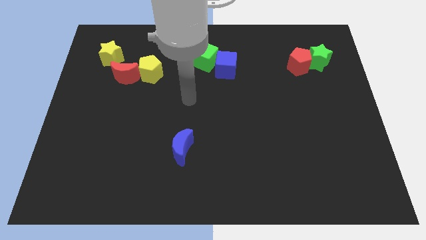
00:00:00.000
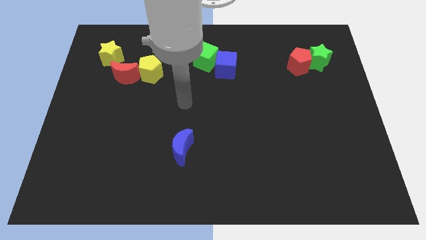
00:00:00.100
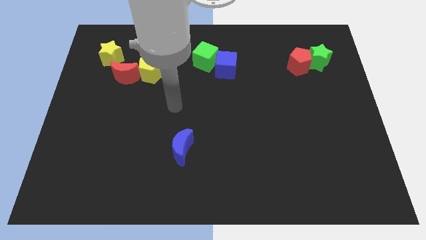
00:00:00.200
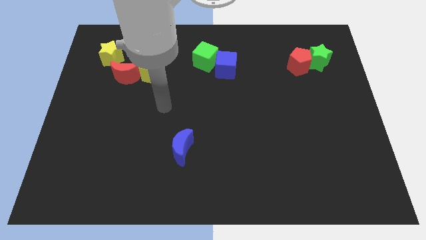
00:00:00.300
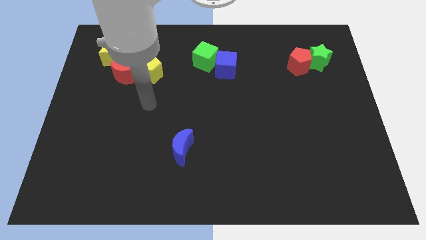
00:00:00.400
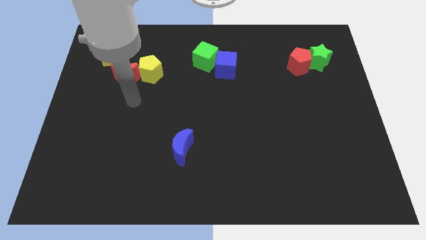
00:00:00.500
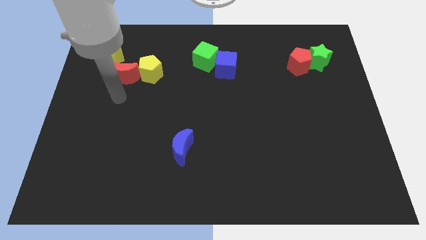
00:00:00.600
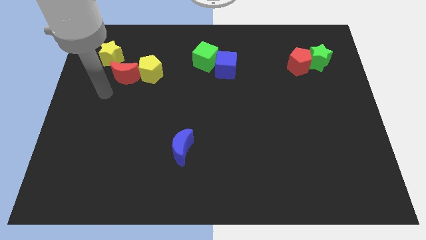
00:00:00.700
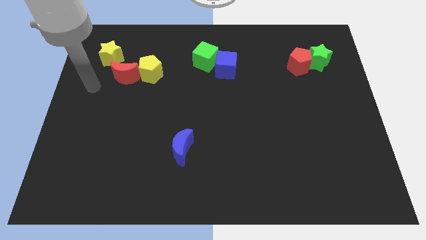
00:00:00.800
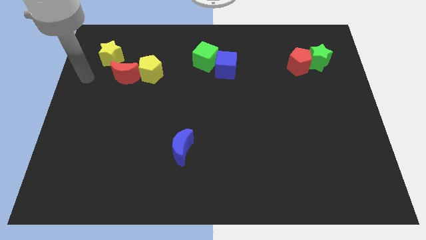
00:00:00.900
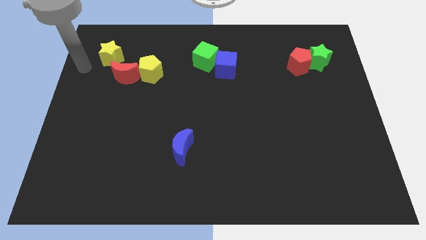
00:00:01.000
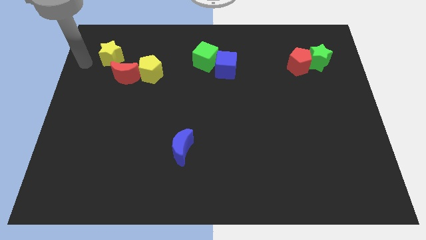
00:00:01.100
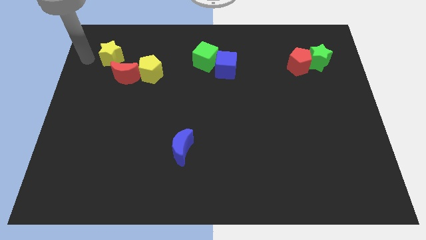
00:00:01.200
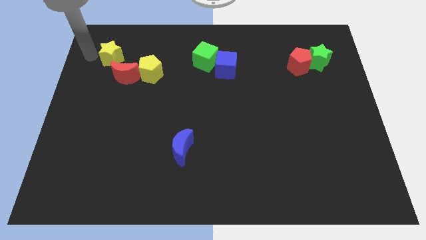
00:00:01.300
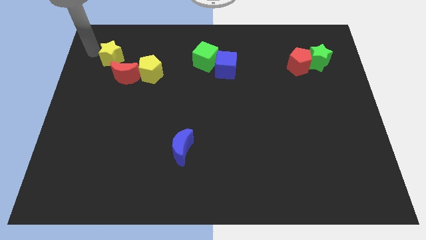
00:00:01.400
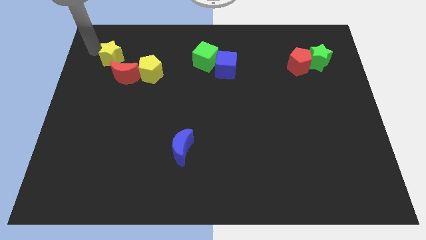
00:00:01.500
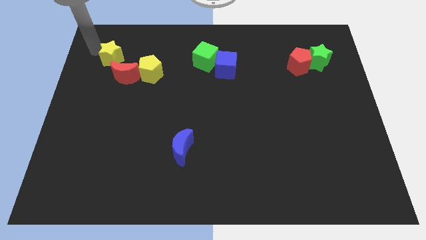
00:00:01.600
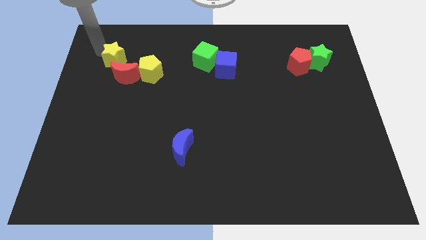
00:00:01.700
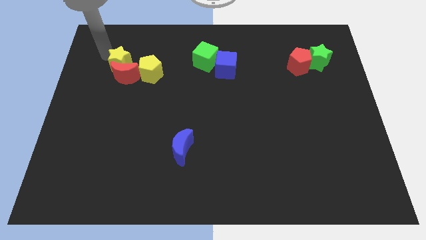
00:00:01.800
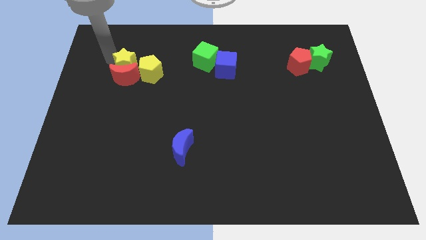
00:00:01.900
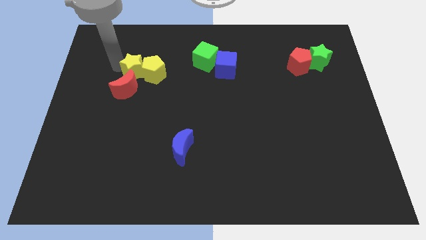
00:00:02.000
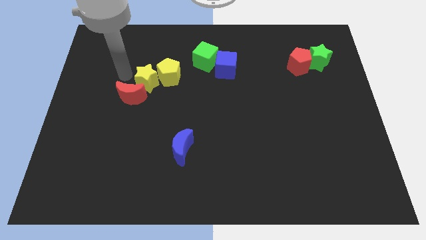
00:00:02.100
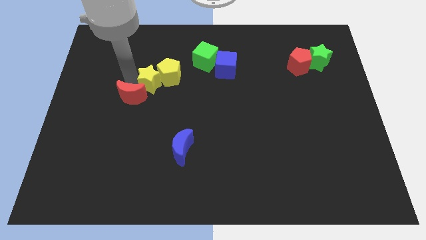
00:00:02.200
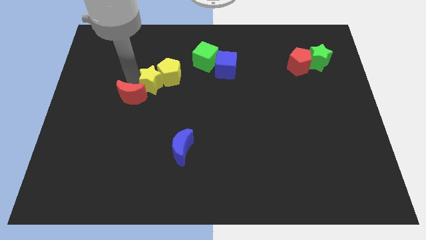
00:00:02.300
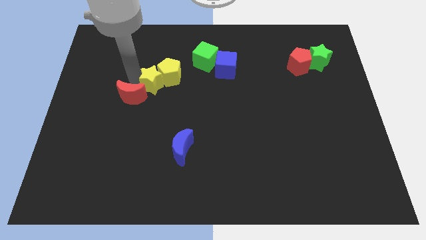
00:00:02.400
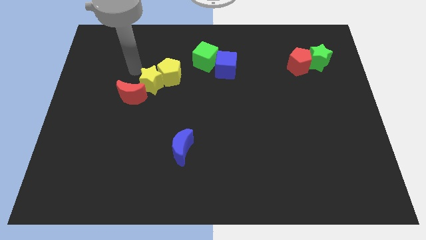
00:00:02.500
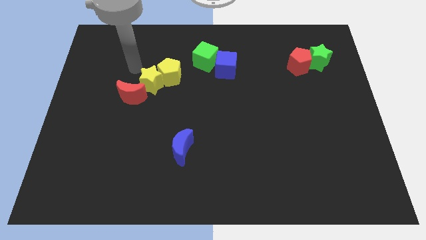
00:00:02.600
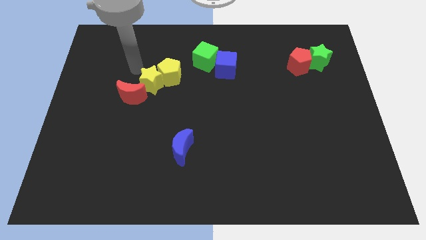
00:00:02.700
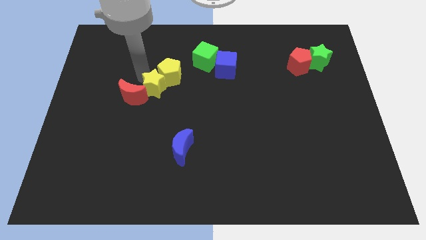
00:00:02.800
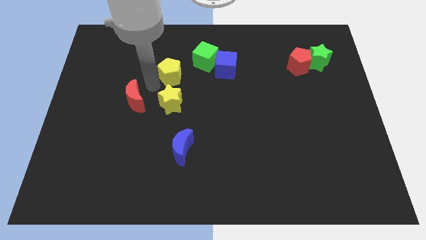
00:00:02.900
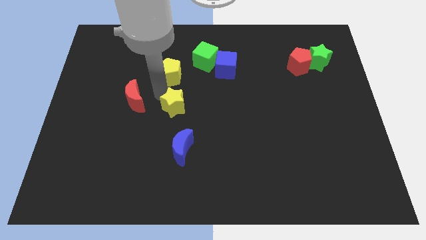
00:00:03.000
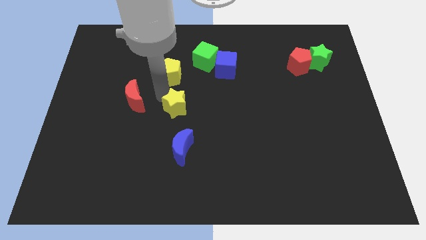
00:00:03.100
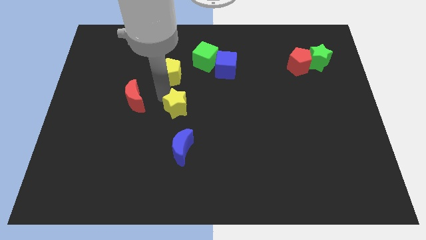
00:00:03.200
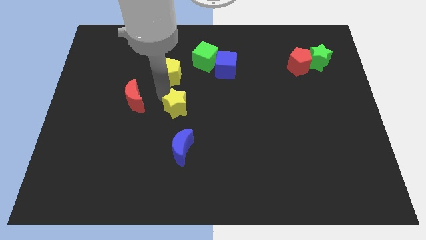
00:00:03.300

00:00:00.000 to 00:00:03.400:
push the yellow star in between the yellow pentagon and blue moon

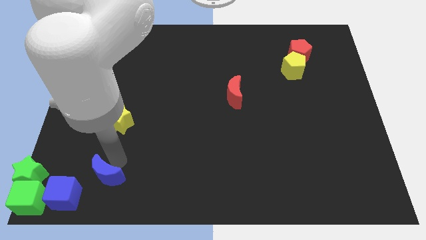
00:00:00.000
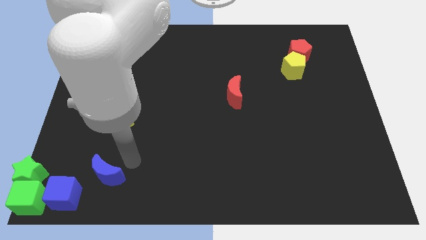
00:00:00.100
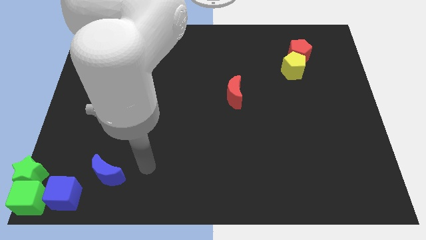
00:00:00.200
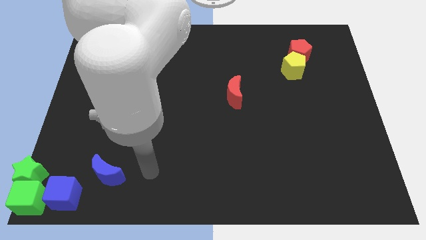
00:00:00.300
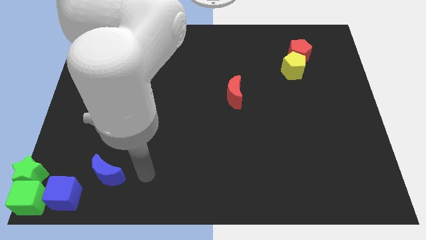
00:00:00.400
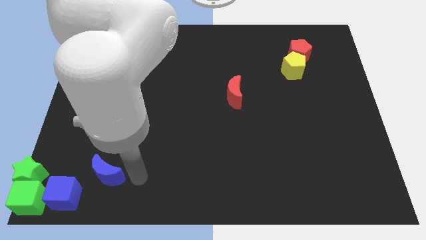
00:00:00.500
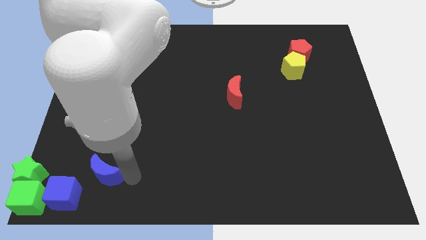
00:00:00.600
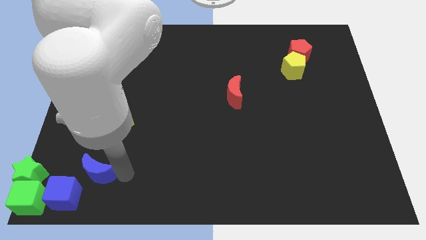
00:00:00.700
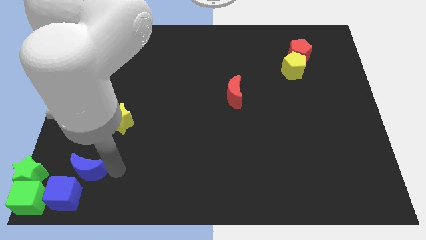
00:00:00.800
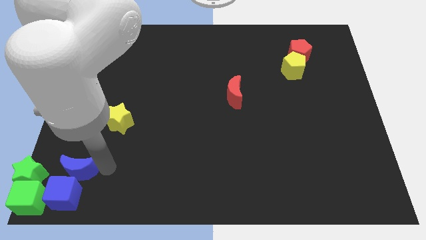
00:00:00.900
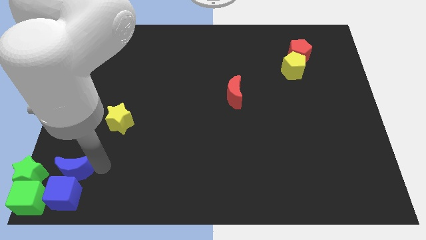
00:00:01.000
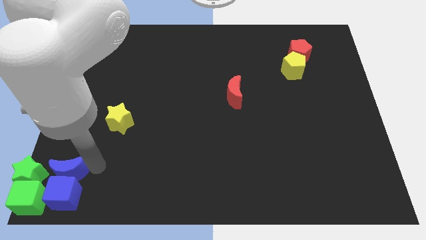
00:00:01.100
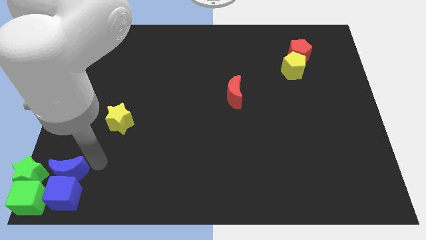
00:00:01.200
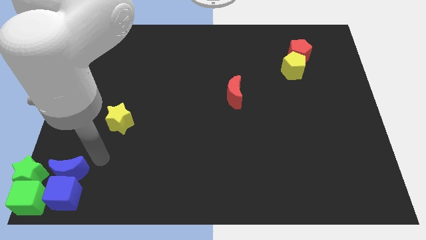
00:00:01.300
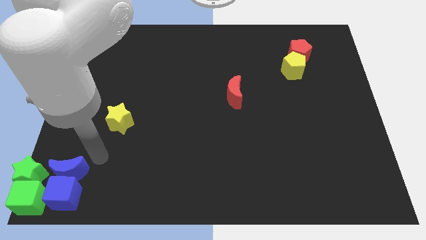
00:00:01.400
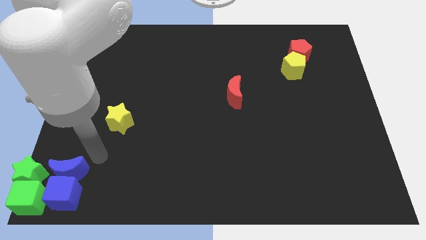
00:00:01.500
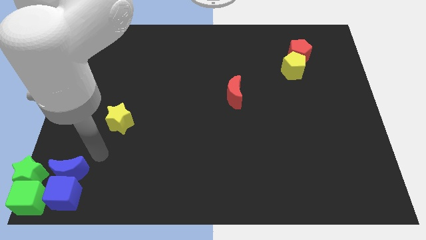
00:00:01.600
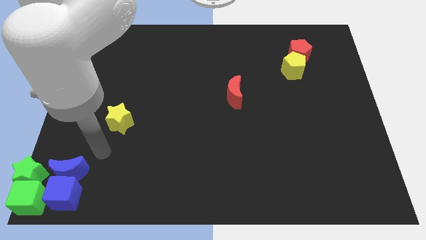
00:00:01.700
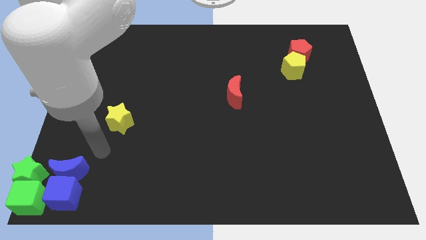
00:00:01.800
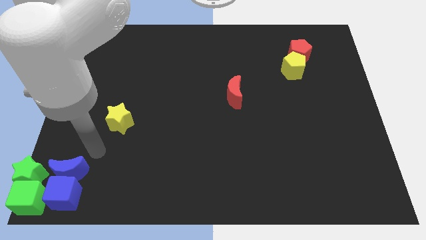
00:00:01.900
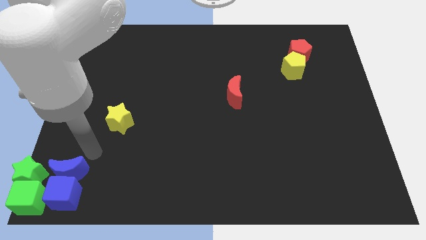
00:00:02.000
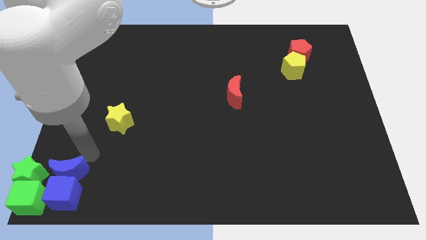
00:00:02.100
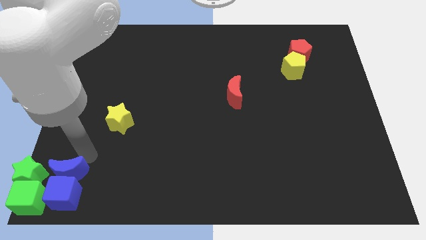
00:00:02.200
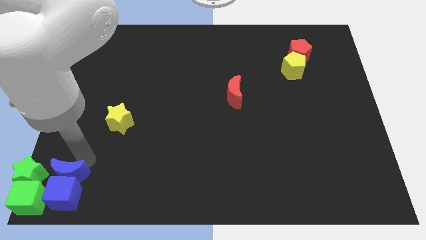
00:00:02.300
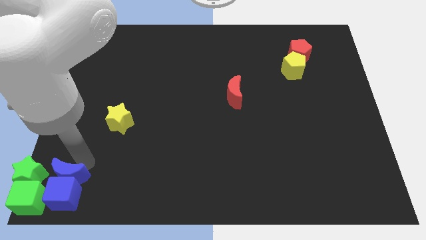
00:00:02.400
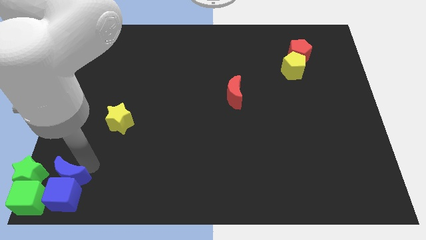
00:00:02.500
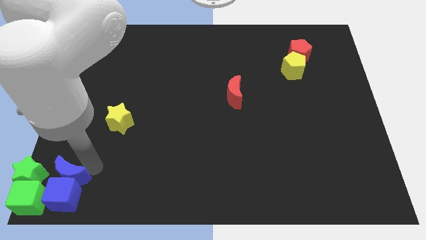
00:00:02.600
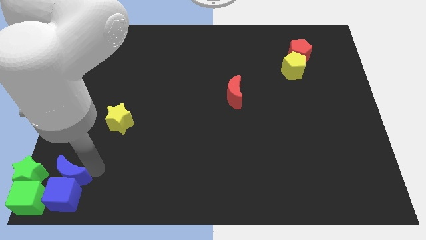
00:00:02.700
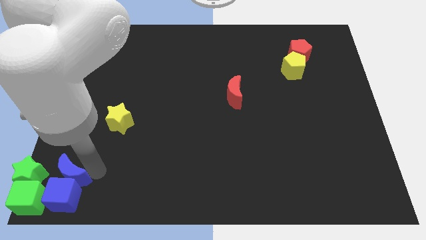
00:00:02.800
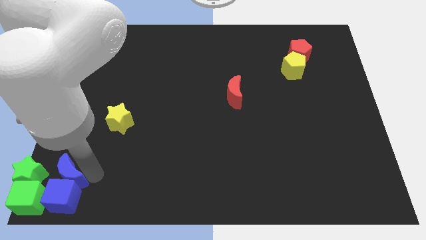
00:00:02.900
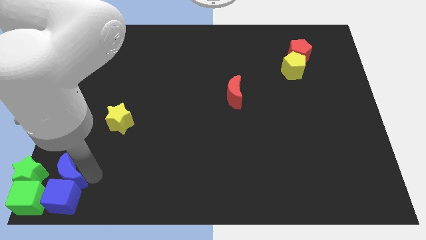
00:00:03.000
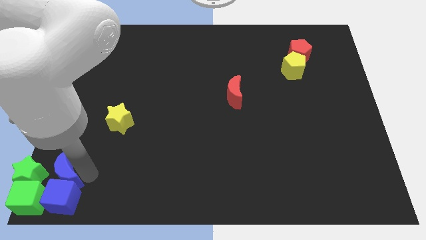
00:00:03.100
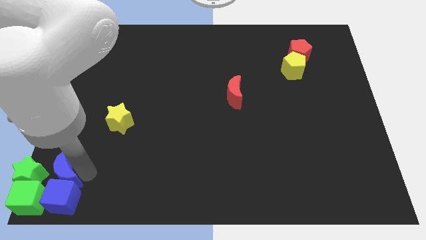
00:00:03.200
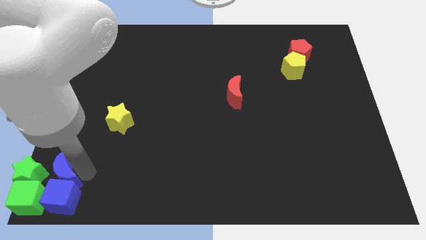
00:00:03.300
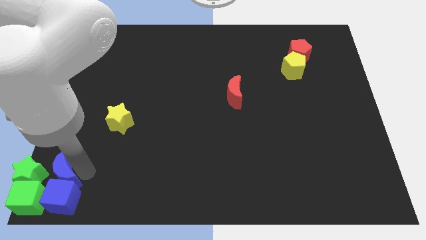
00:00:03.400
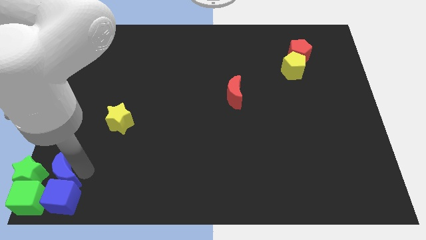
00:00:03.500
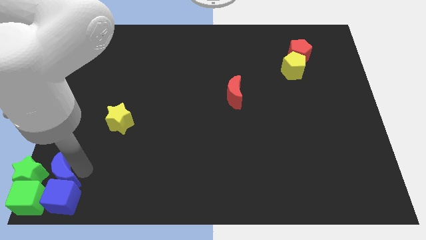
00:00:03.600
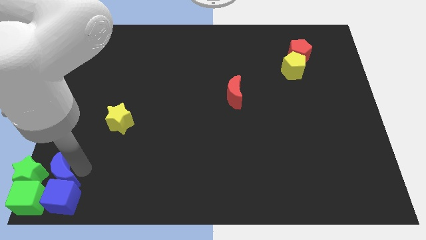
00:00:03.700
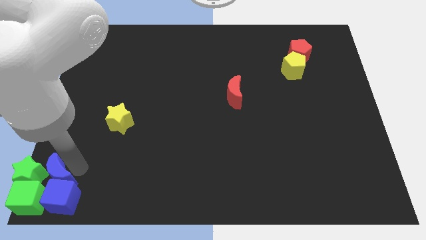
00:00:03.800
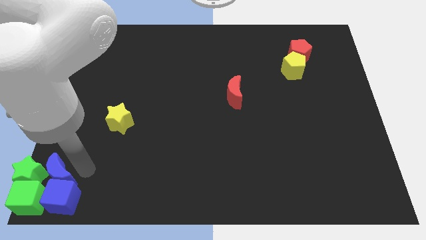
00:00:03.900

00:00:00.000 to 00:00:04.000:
slide blue moon above blue cube

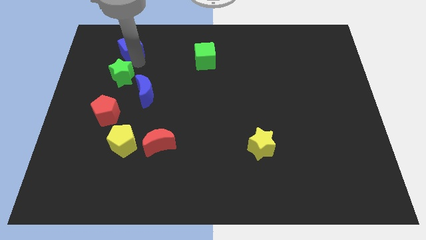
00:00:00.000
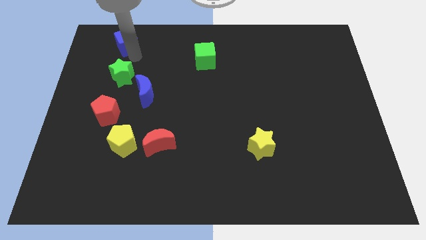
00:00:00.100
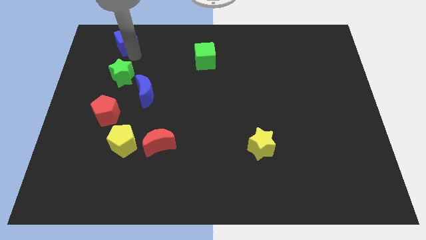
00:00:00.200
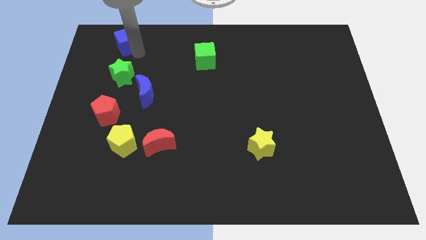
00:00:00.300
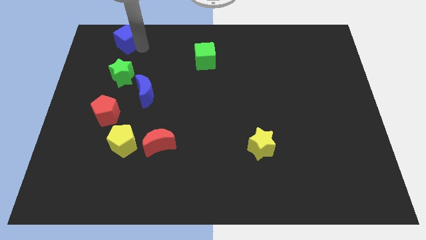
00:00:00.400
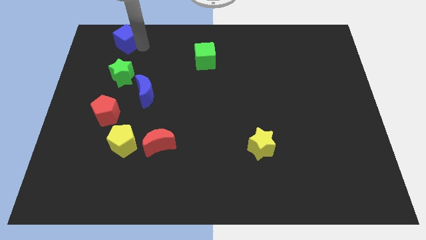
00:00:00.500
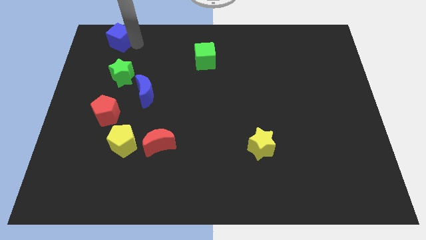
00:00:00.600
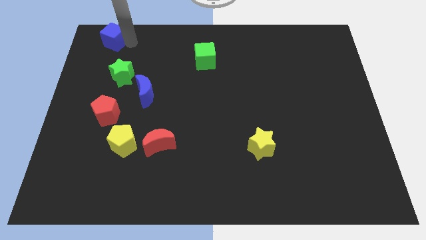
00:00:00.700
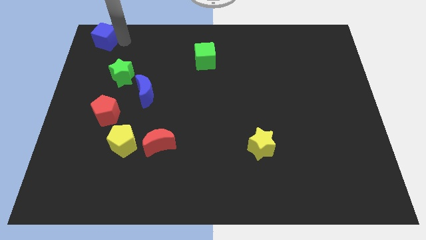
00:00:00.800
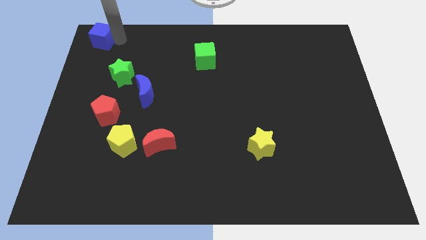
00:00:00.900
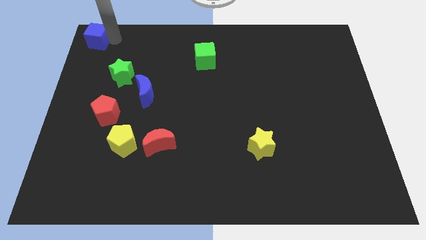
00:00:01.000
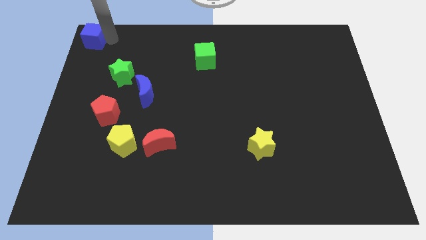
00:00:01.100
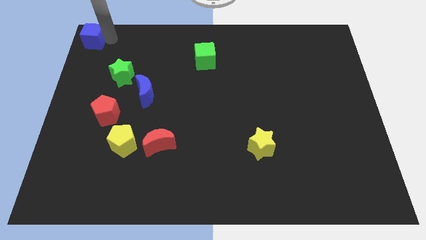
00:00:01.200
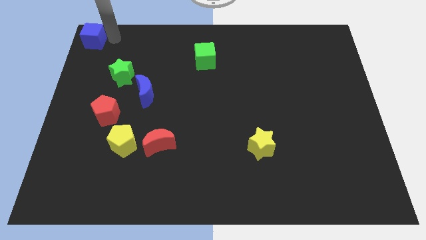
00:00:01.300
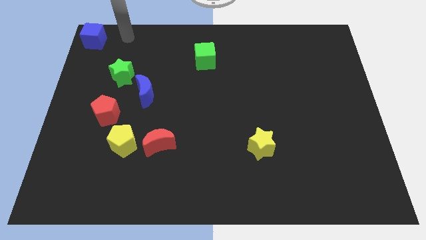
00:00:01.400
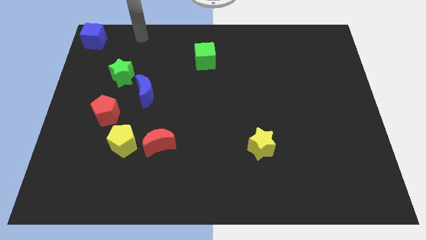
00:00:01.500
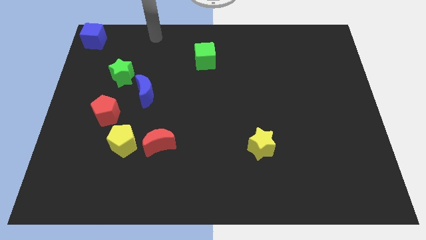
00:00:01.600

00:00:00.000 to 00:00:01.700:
move the blue cube to the top left corner
